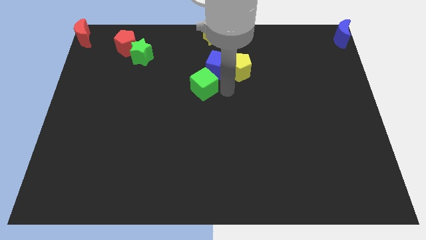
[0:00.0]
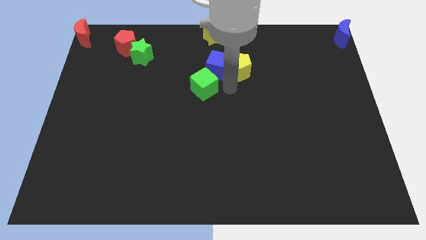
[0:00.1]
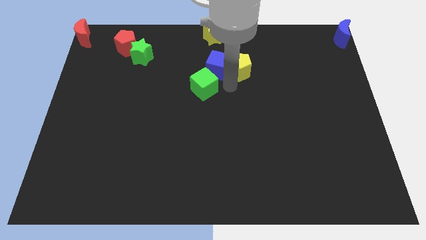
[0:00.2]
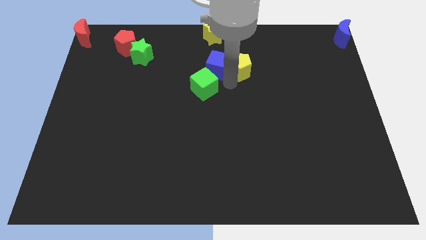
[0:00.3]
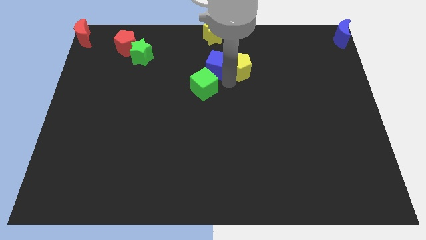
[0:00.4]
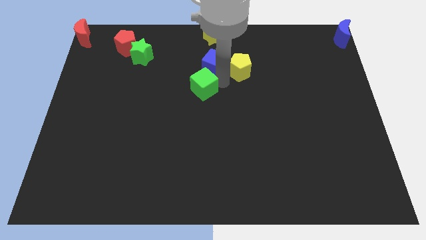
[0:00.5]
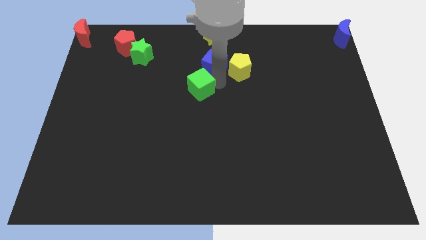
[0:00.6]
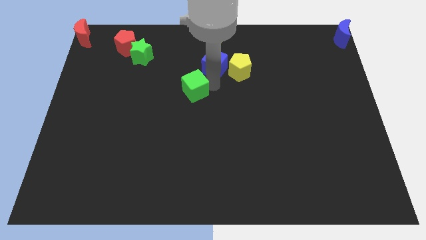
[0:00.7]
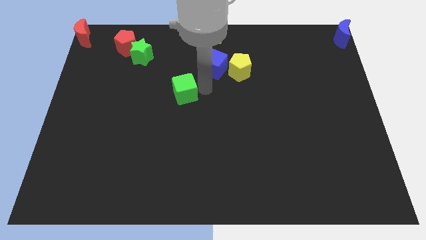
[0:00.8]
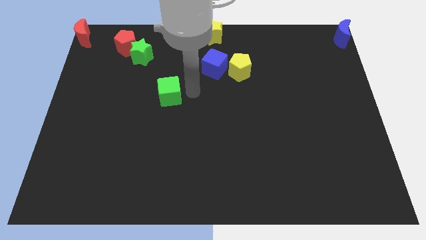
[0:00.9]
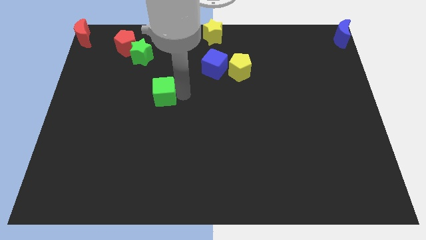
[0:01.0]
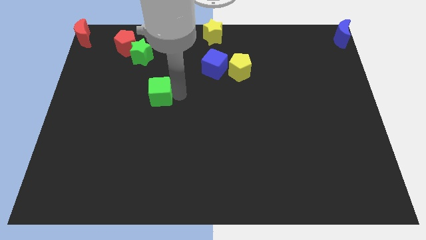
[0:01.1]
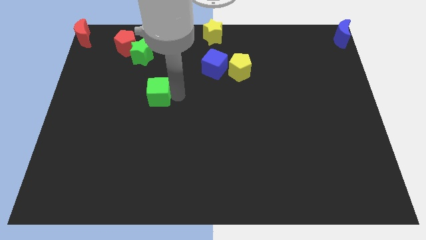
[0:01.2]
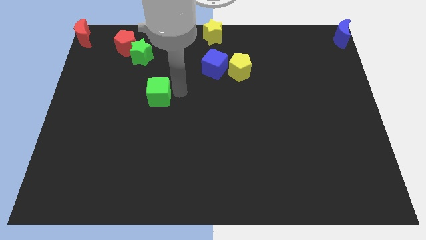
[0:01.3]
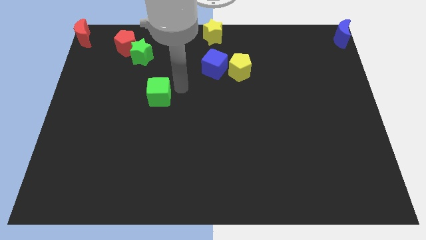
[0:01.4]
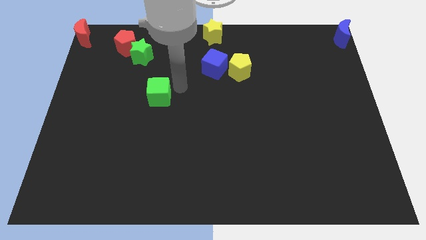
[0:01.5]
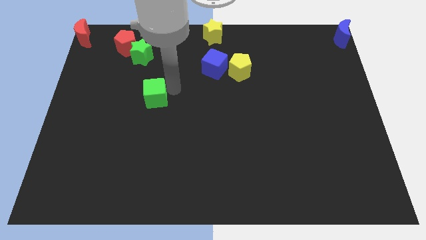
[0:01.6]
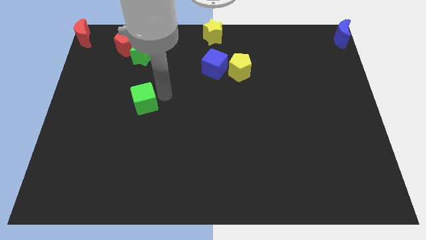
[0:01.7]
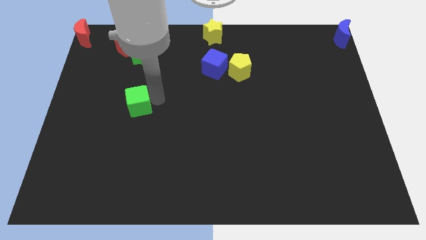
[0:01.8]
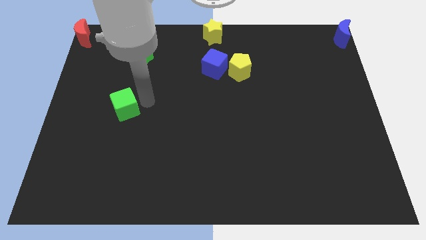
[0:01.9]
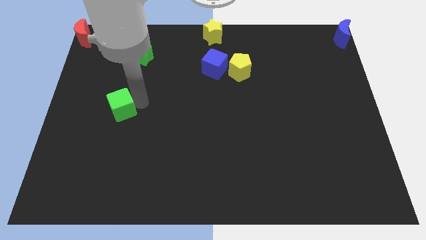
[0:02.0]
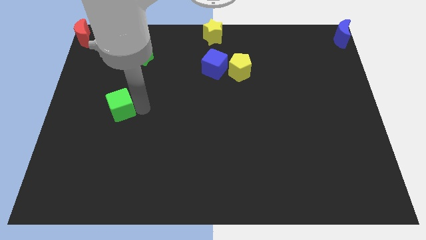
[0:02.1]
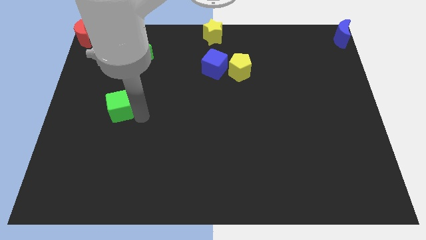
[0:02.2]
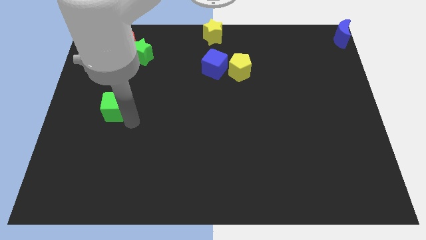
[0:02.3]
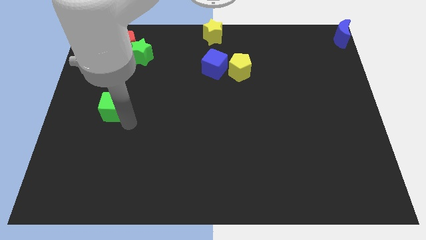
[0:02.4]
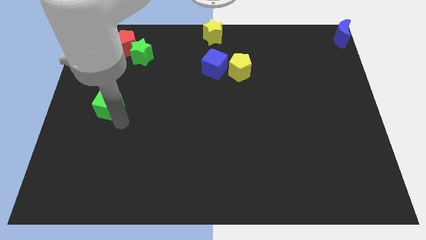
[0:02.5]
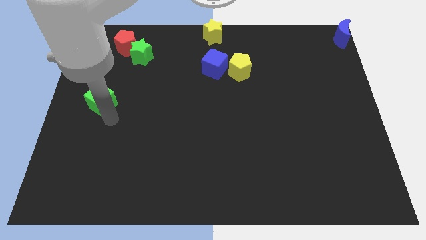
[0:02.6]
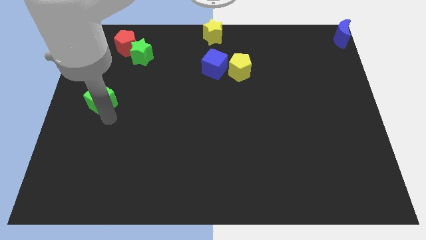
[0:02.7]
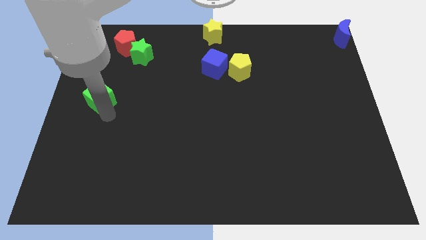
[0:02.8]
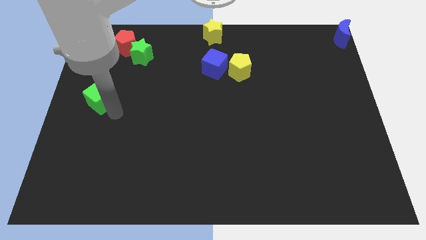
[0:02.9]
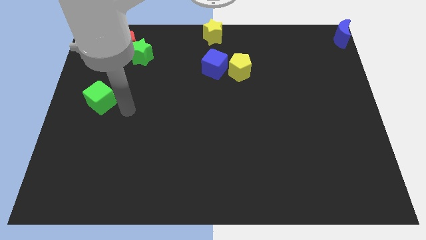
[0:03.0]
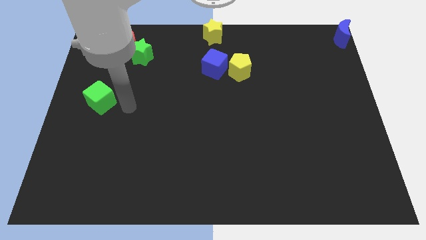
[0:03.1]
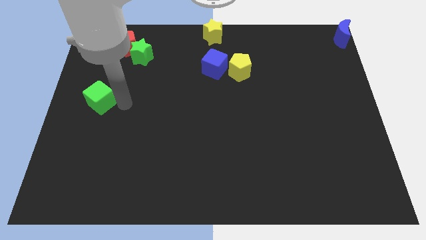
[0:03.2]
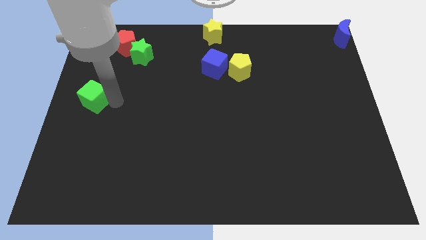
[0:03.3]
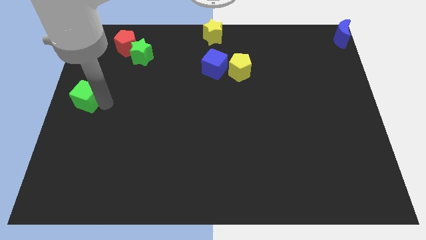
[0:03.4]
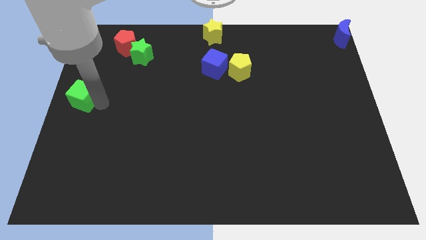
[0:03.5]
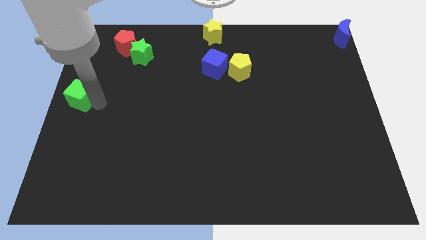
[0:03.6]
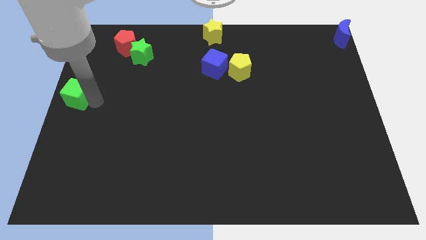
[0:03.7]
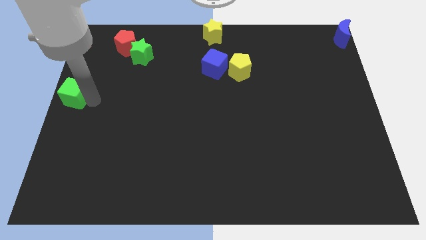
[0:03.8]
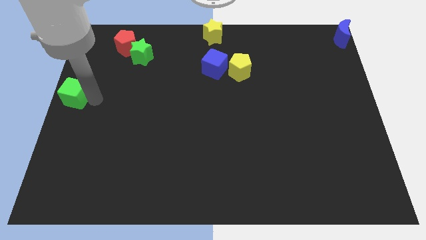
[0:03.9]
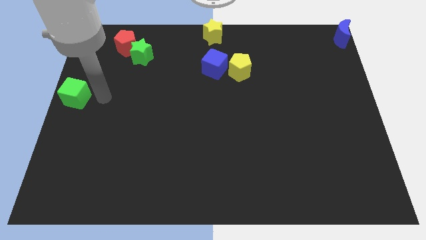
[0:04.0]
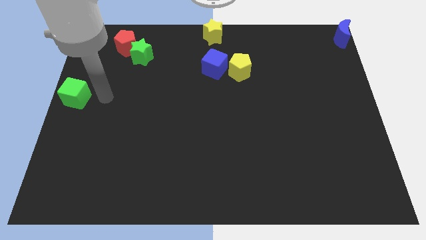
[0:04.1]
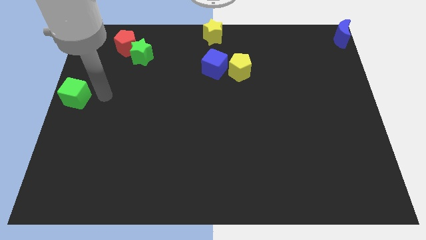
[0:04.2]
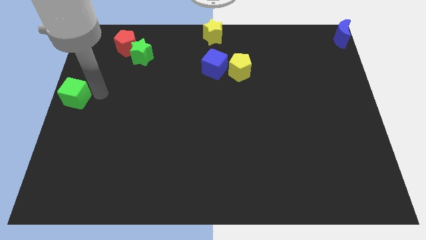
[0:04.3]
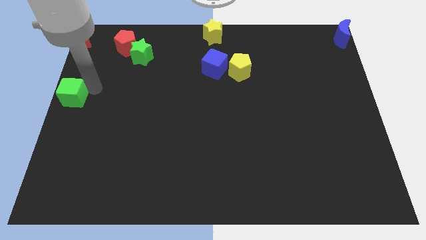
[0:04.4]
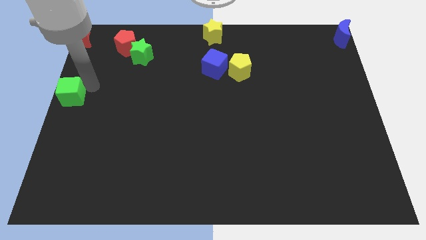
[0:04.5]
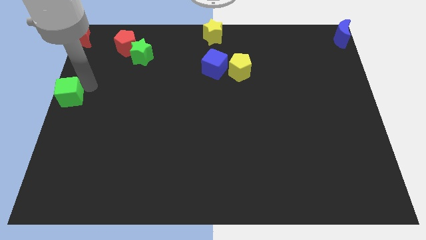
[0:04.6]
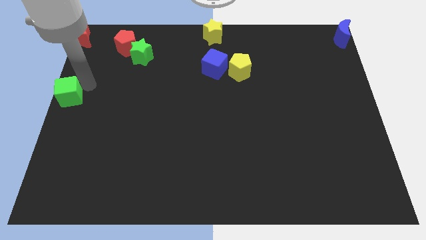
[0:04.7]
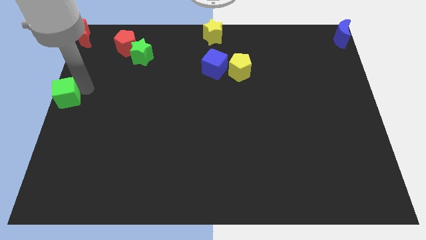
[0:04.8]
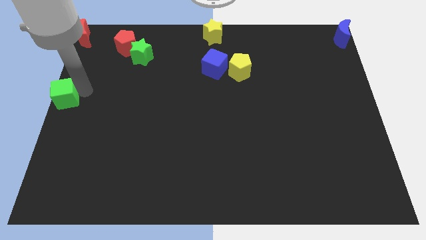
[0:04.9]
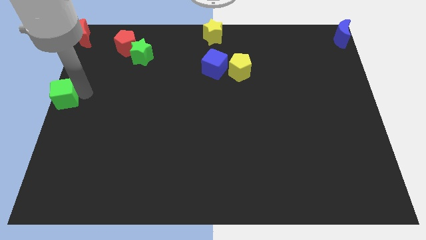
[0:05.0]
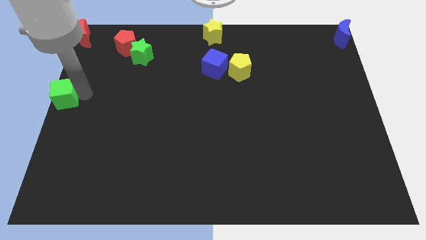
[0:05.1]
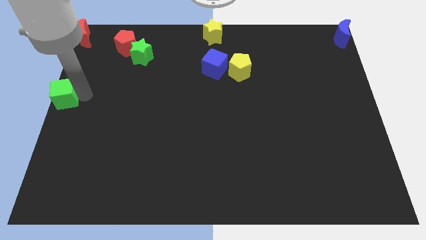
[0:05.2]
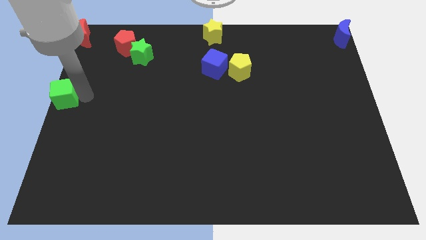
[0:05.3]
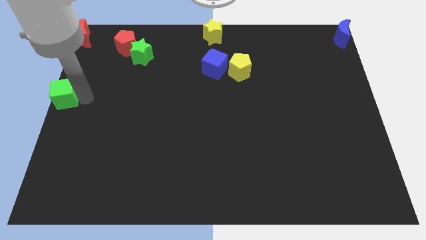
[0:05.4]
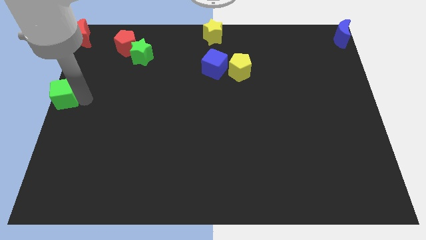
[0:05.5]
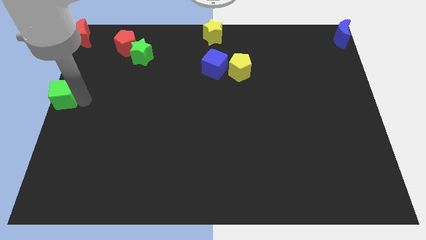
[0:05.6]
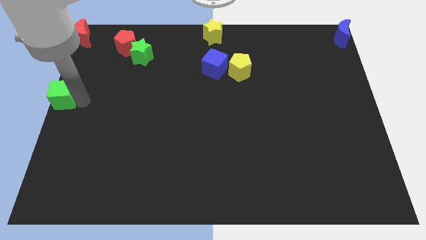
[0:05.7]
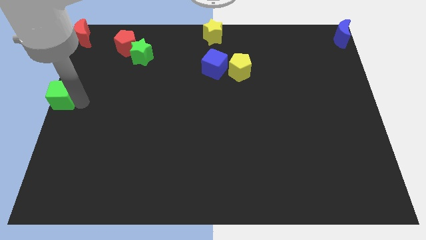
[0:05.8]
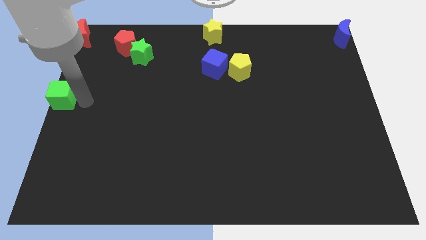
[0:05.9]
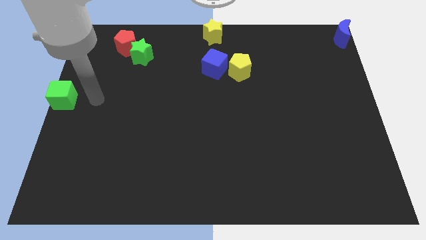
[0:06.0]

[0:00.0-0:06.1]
push green cube at the center left

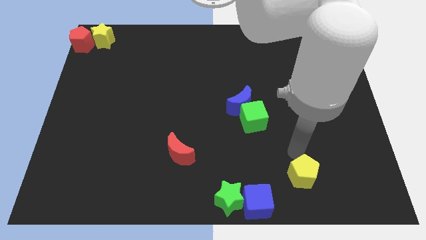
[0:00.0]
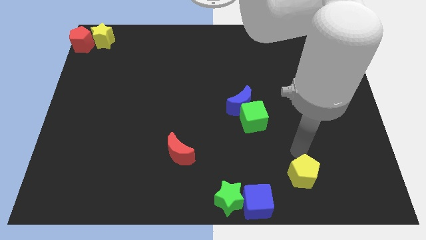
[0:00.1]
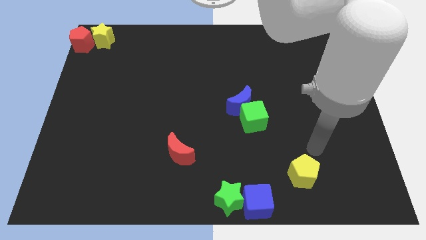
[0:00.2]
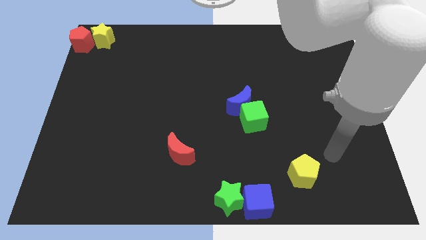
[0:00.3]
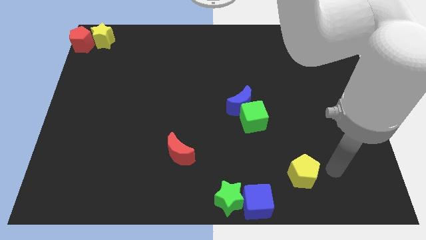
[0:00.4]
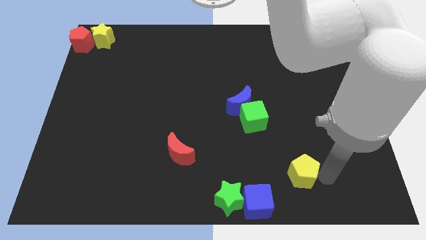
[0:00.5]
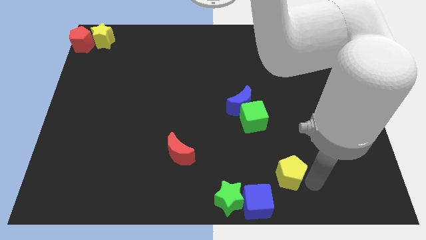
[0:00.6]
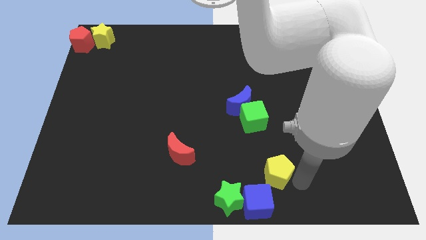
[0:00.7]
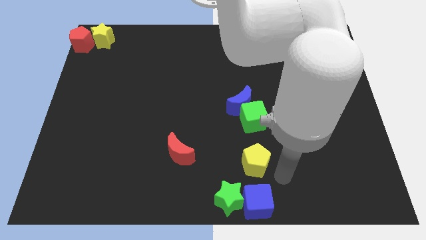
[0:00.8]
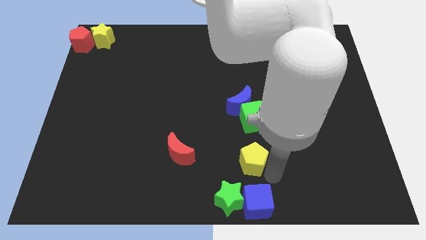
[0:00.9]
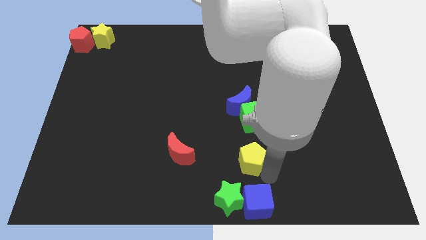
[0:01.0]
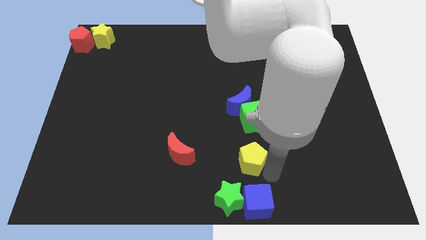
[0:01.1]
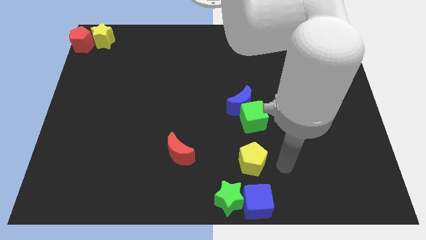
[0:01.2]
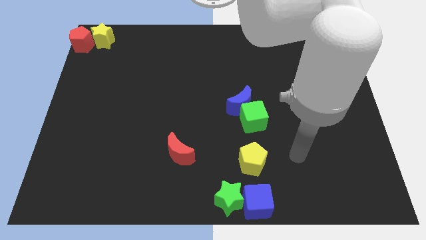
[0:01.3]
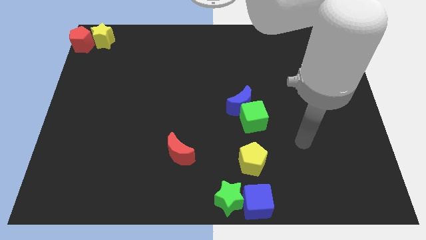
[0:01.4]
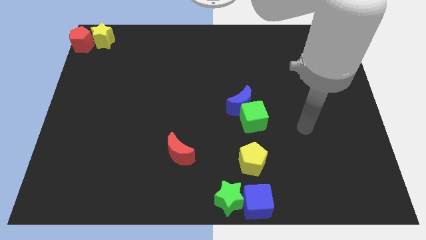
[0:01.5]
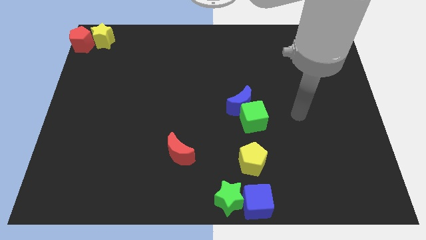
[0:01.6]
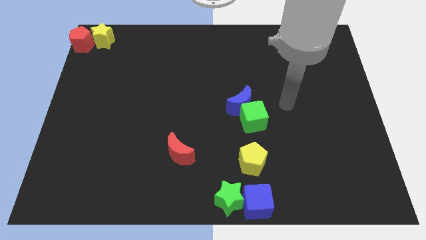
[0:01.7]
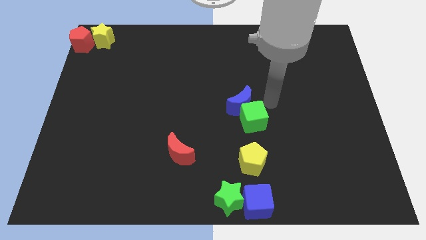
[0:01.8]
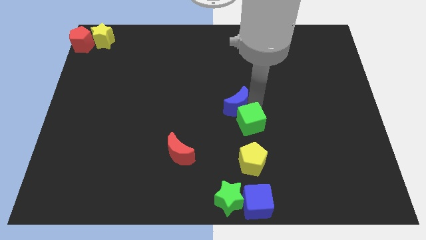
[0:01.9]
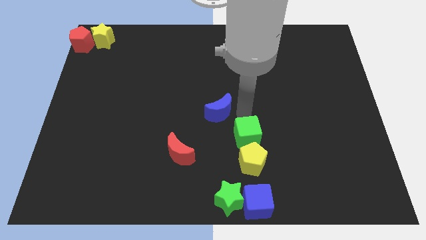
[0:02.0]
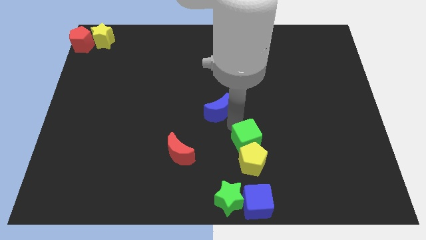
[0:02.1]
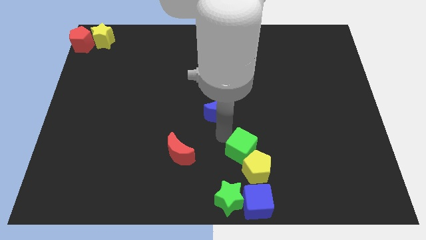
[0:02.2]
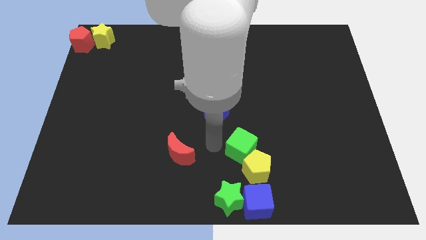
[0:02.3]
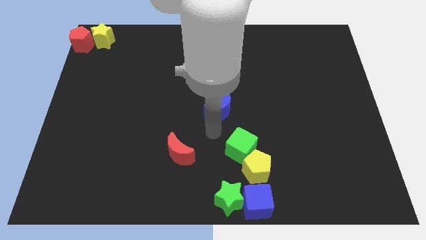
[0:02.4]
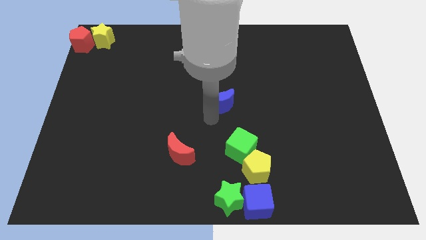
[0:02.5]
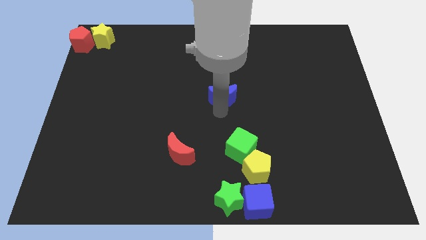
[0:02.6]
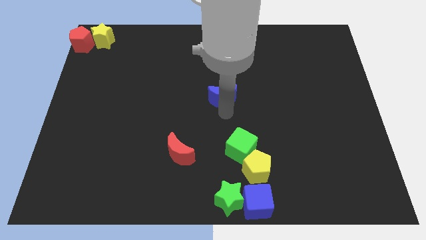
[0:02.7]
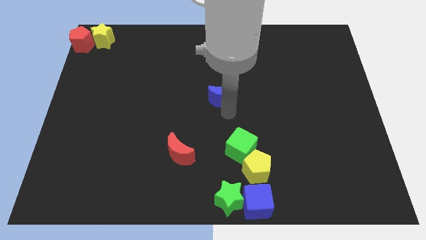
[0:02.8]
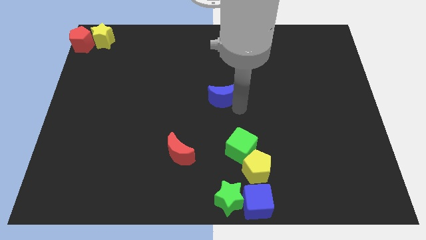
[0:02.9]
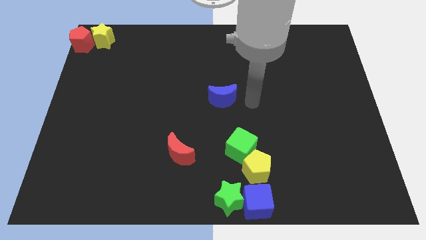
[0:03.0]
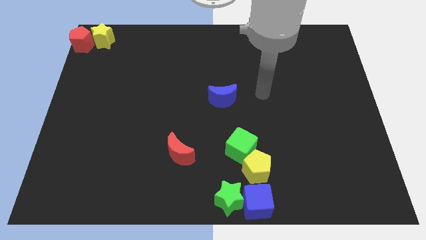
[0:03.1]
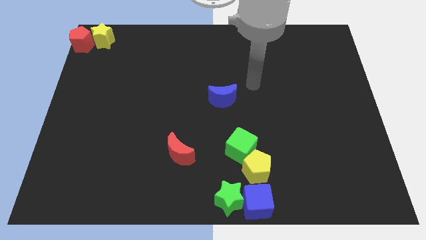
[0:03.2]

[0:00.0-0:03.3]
place the green cube and yellow pentagon together above the blue cube
